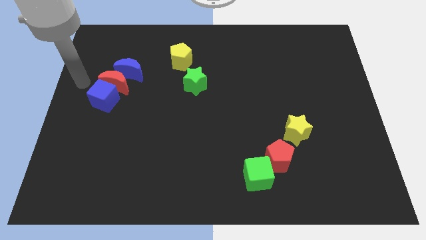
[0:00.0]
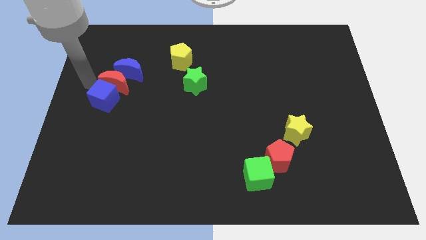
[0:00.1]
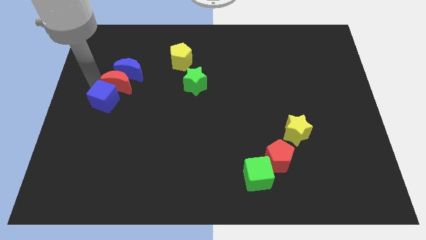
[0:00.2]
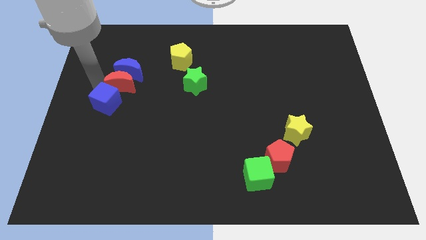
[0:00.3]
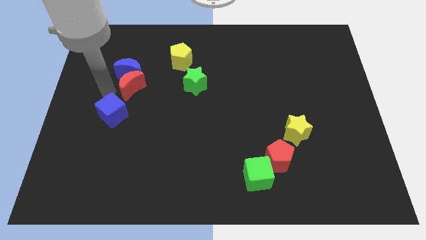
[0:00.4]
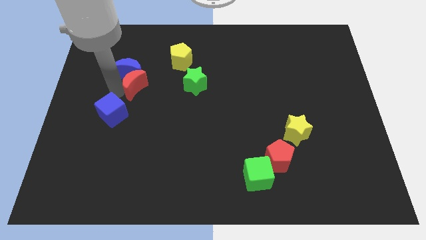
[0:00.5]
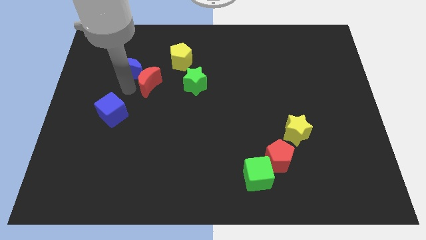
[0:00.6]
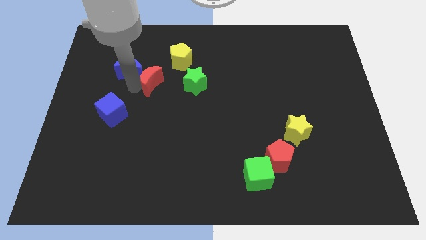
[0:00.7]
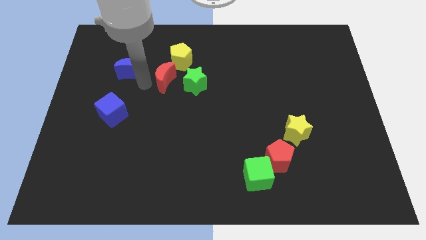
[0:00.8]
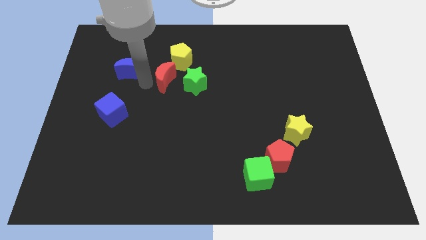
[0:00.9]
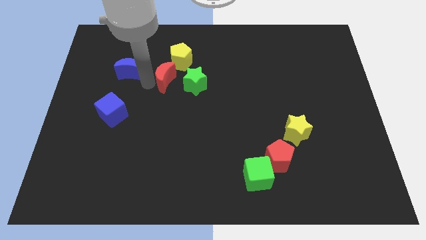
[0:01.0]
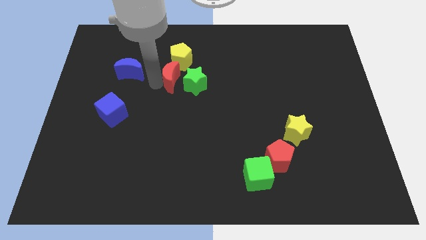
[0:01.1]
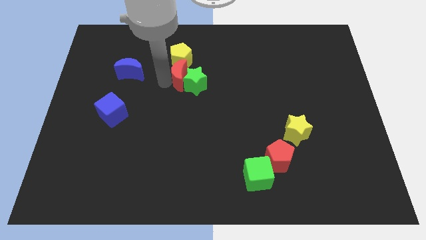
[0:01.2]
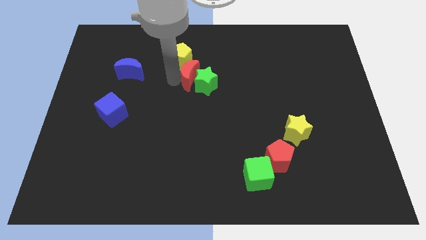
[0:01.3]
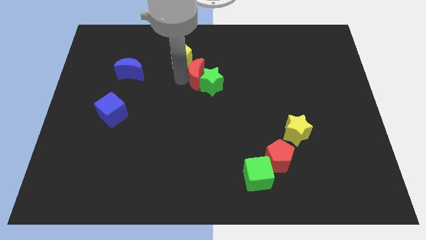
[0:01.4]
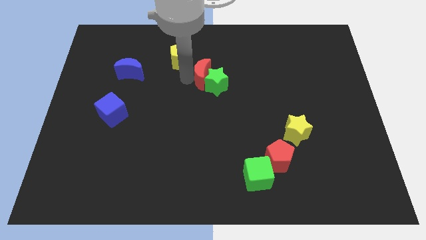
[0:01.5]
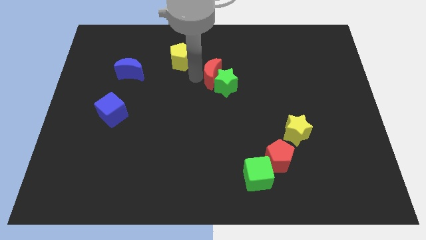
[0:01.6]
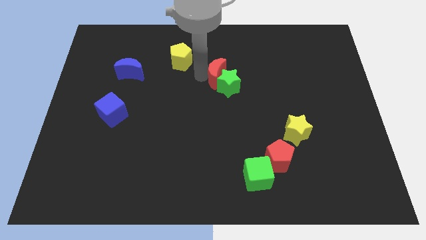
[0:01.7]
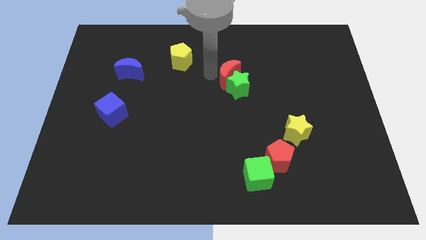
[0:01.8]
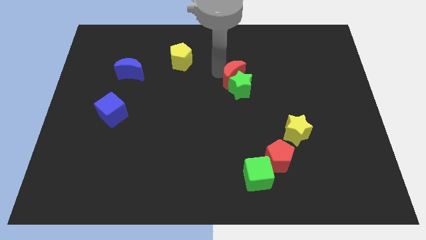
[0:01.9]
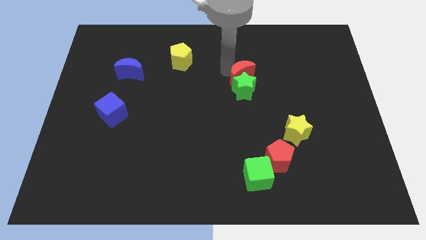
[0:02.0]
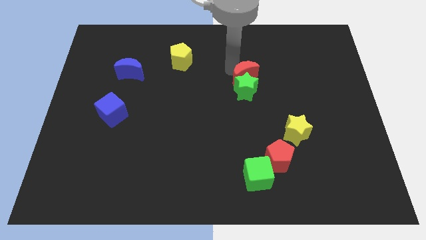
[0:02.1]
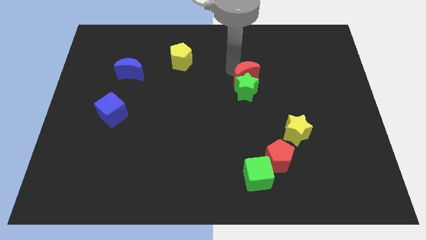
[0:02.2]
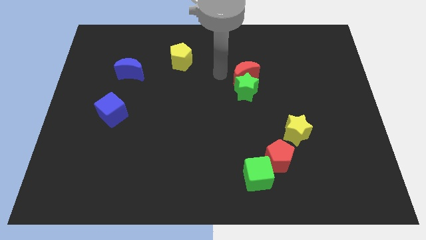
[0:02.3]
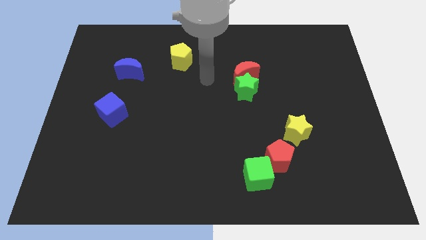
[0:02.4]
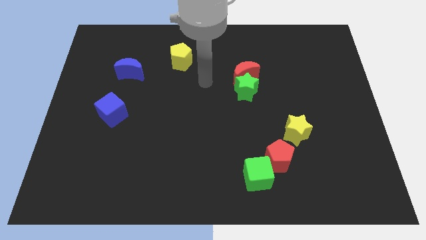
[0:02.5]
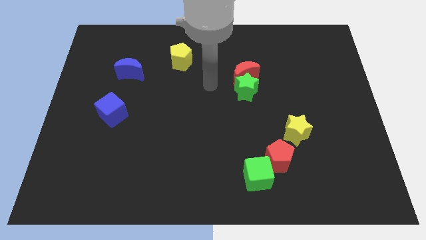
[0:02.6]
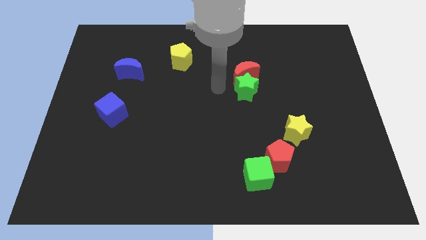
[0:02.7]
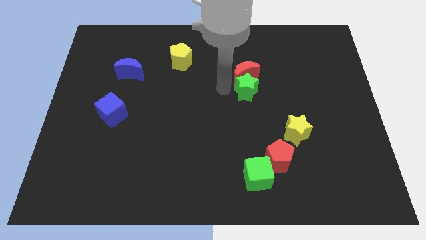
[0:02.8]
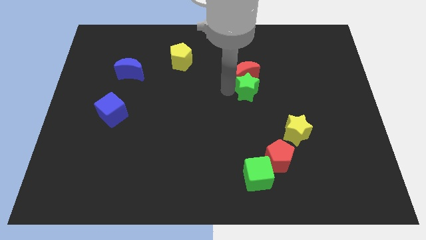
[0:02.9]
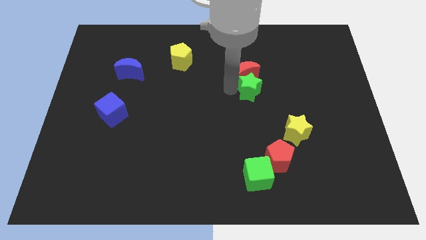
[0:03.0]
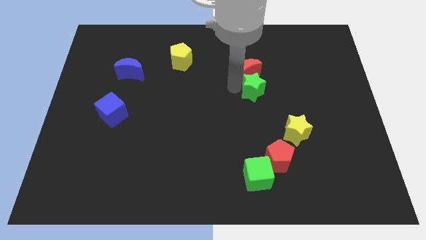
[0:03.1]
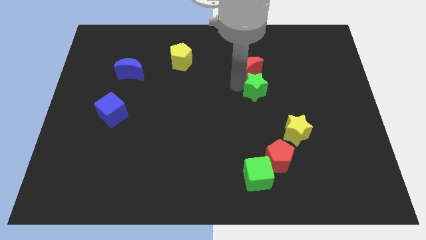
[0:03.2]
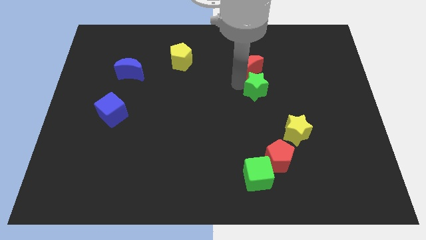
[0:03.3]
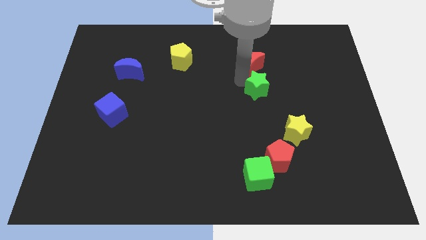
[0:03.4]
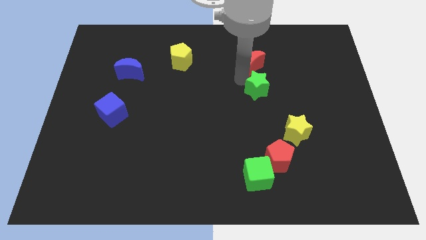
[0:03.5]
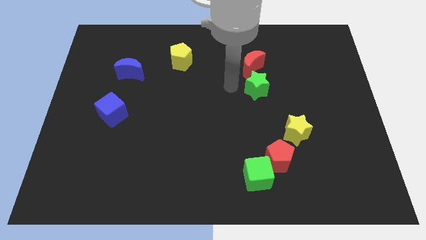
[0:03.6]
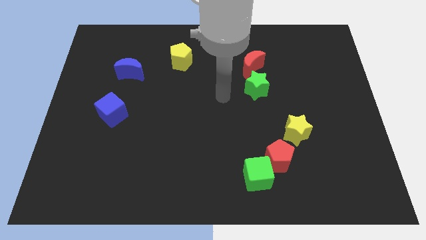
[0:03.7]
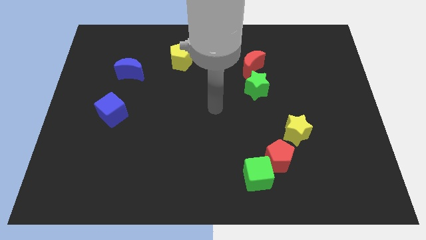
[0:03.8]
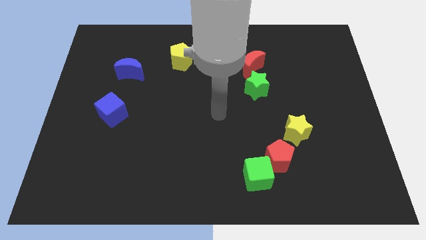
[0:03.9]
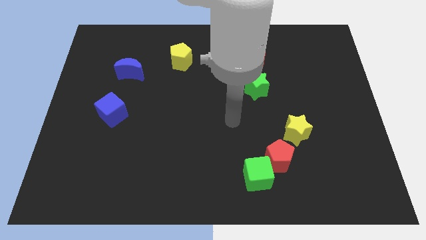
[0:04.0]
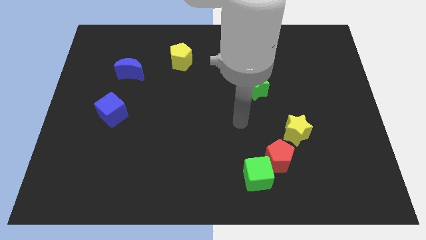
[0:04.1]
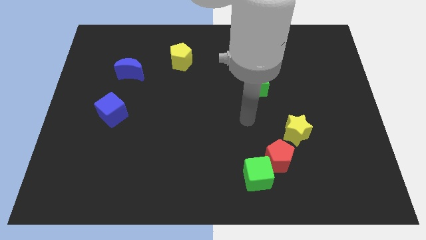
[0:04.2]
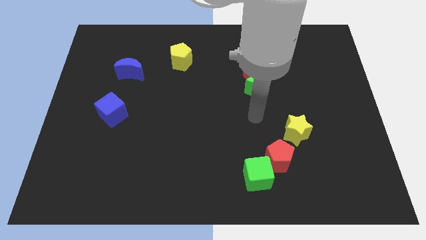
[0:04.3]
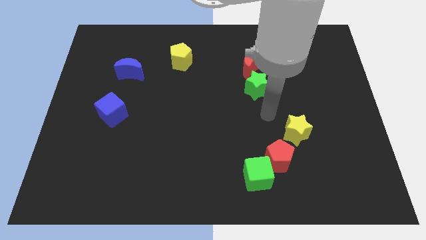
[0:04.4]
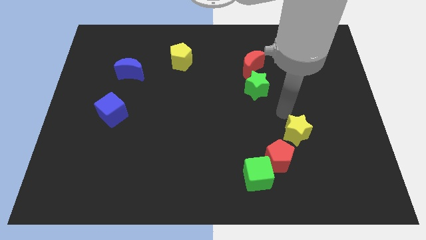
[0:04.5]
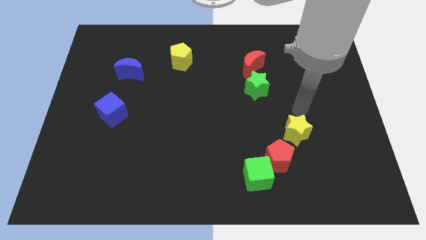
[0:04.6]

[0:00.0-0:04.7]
push red moon into the green star

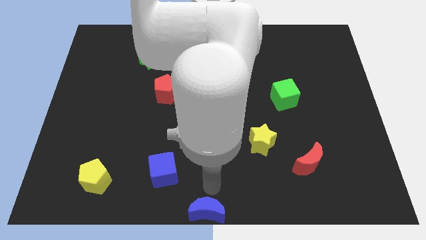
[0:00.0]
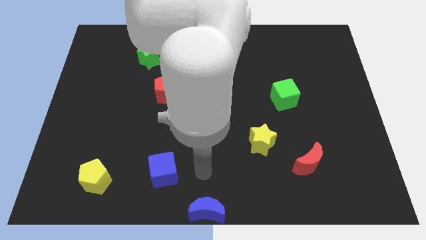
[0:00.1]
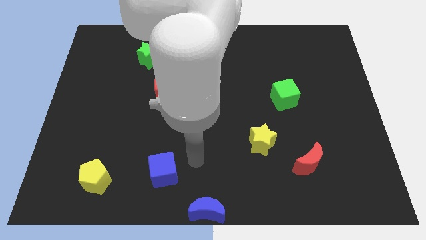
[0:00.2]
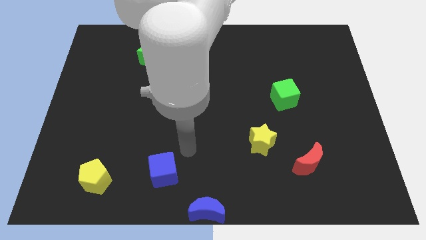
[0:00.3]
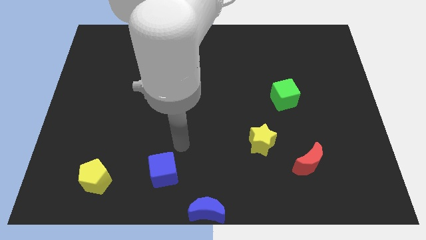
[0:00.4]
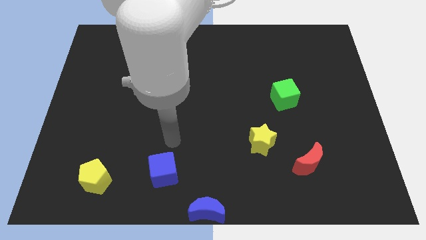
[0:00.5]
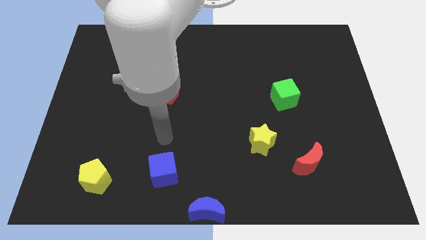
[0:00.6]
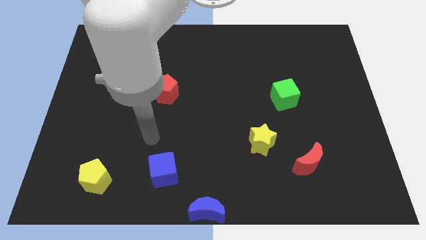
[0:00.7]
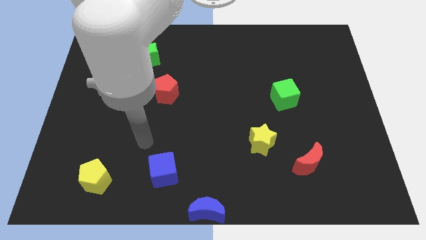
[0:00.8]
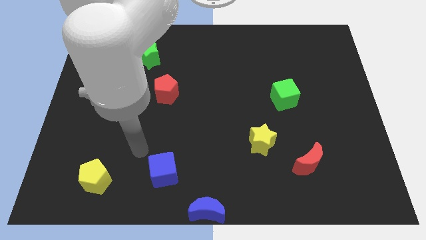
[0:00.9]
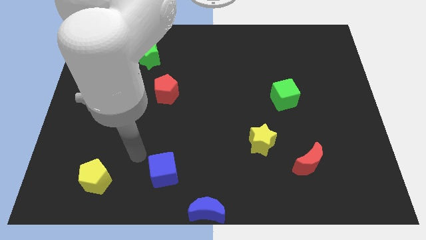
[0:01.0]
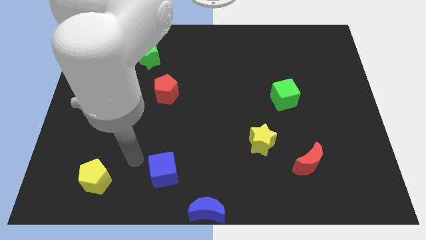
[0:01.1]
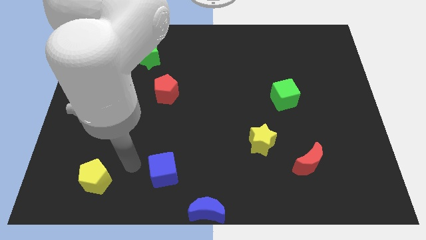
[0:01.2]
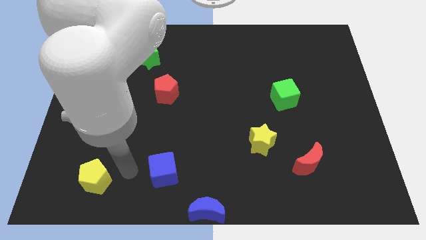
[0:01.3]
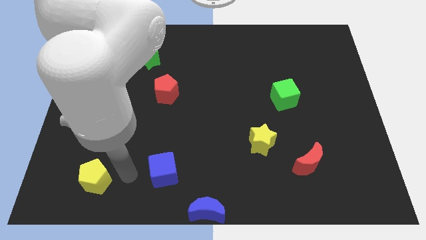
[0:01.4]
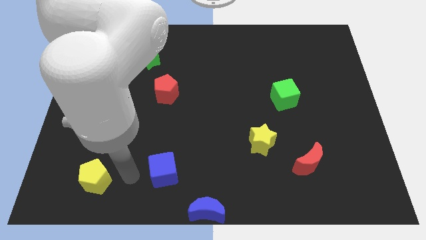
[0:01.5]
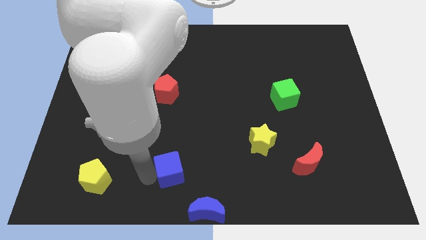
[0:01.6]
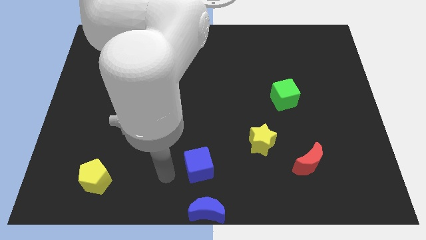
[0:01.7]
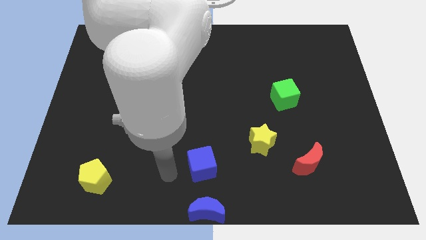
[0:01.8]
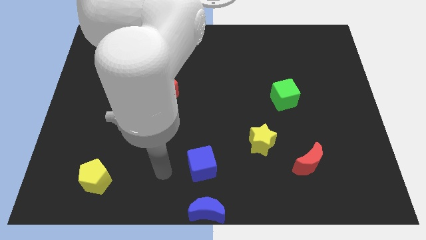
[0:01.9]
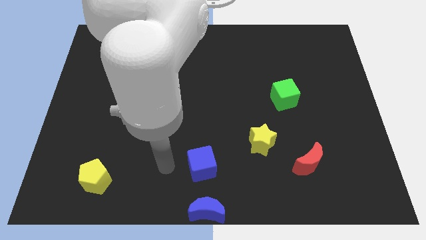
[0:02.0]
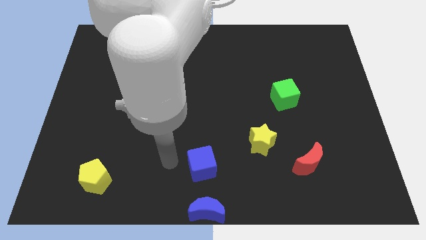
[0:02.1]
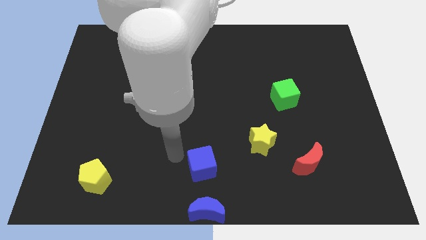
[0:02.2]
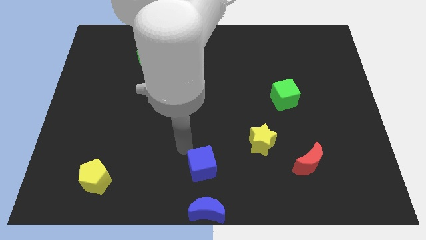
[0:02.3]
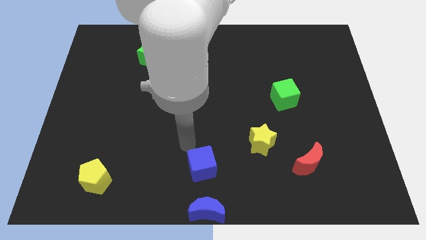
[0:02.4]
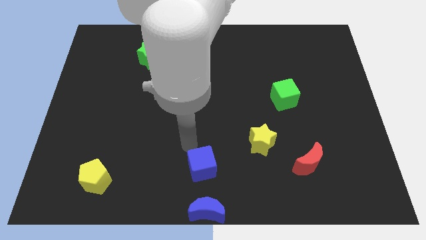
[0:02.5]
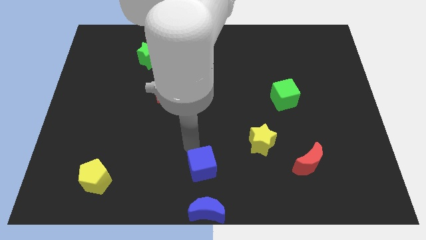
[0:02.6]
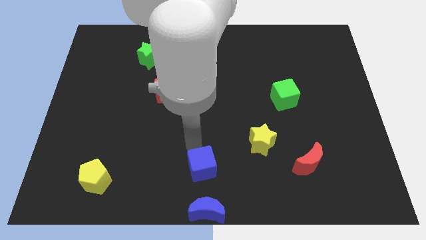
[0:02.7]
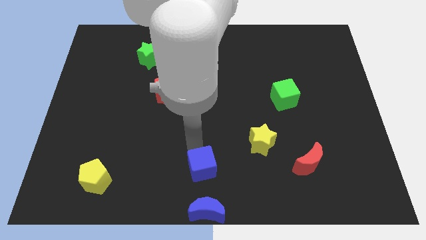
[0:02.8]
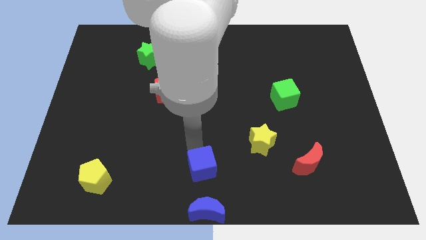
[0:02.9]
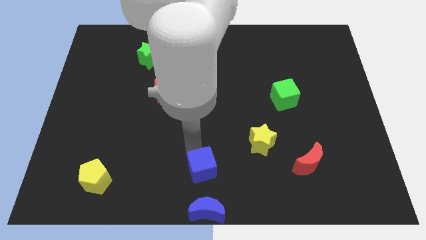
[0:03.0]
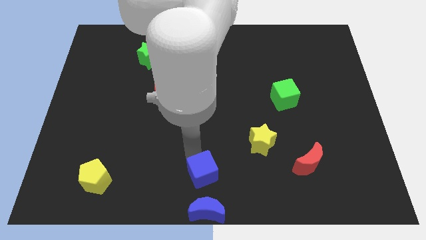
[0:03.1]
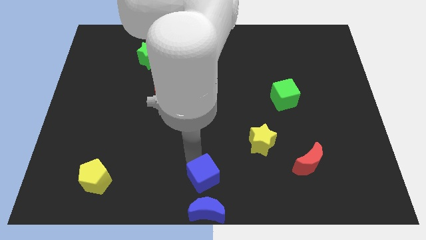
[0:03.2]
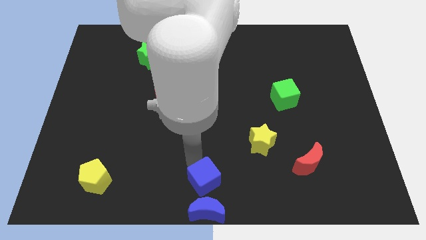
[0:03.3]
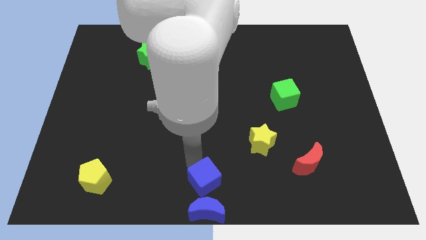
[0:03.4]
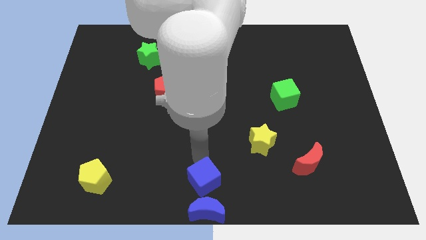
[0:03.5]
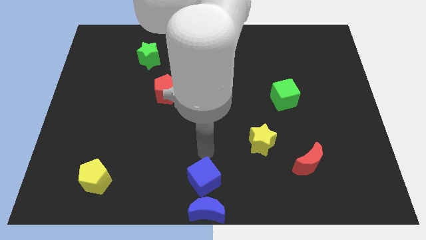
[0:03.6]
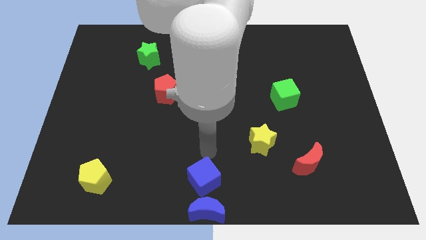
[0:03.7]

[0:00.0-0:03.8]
push the blue cube to the top of the blue crescent

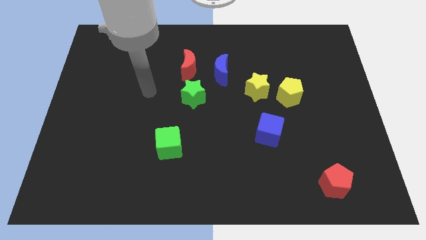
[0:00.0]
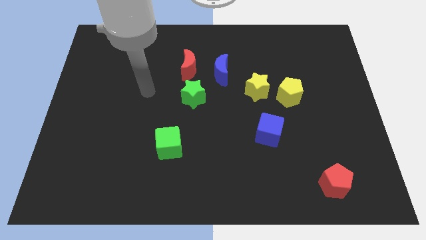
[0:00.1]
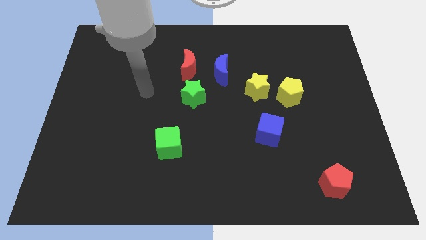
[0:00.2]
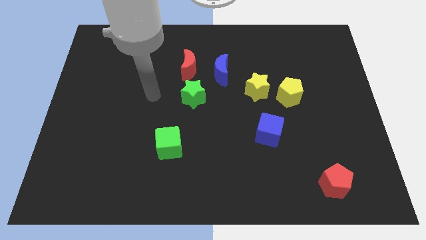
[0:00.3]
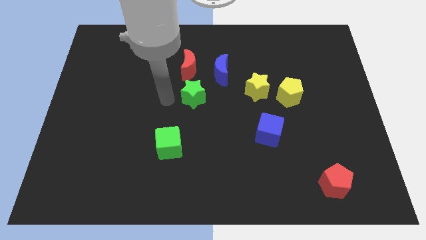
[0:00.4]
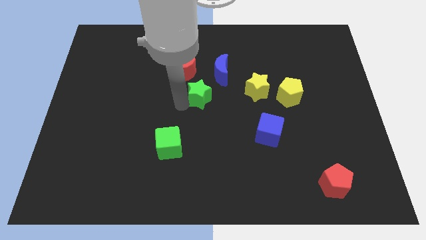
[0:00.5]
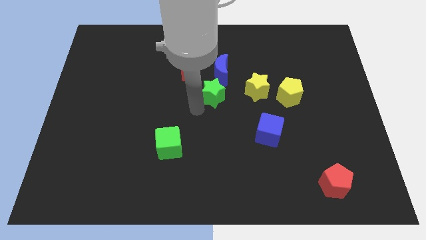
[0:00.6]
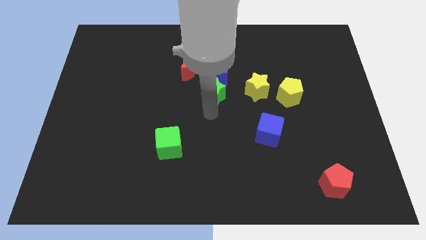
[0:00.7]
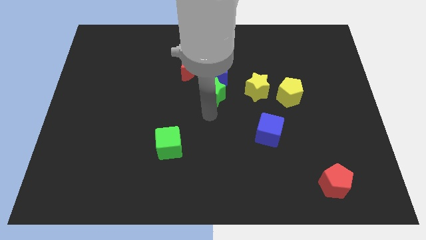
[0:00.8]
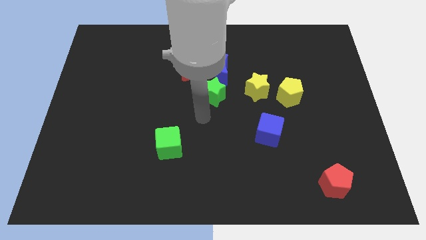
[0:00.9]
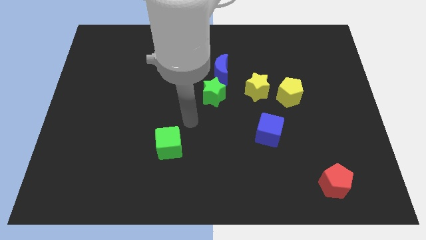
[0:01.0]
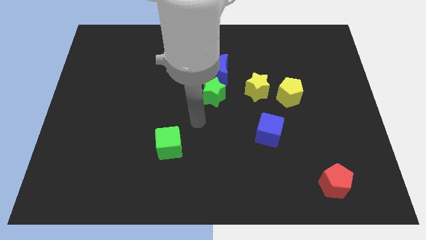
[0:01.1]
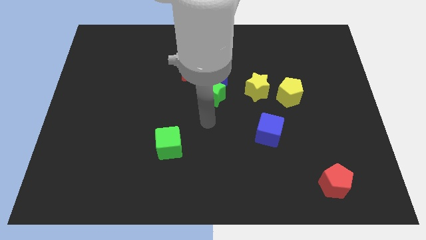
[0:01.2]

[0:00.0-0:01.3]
place the green star below the blue crescent
